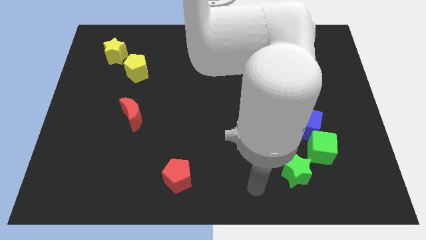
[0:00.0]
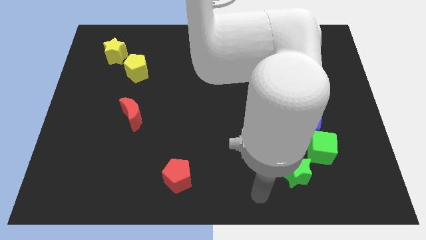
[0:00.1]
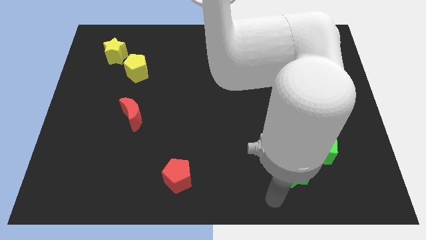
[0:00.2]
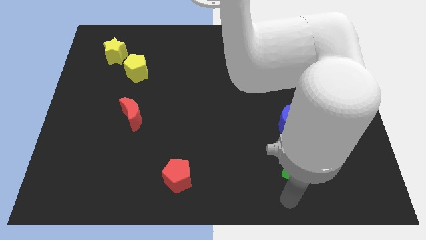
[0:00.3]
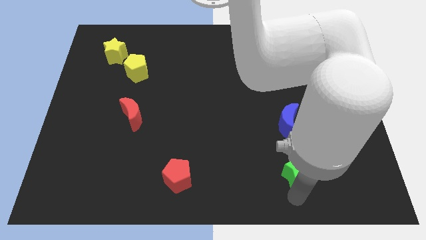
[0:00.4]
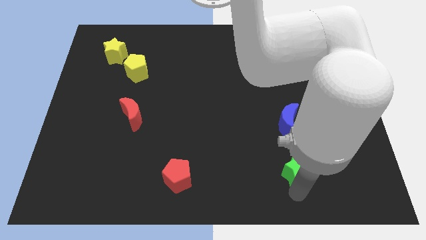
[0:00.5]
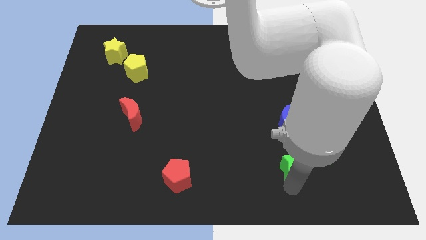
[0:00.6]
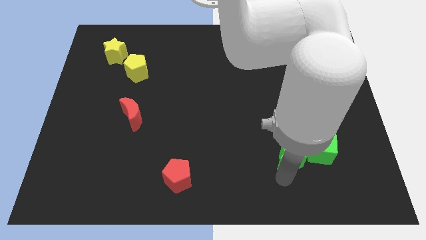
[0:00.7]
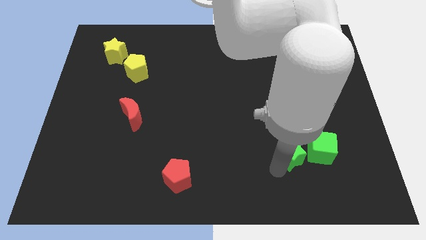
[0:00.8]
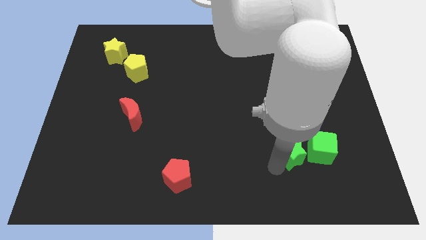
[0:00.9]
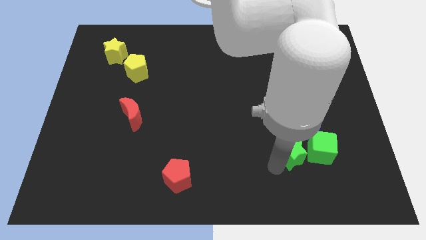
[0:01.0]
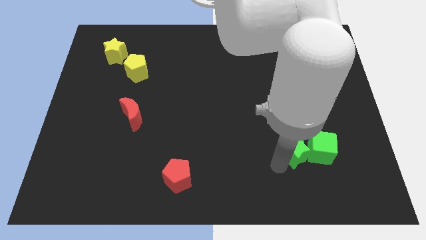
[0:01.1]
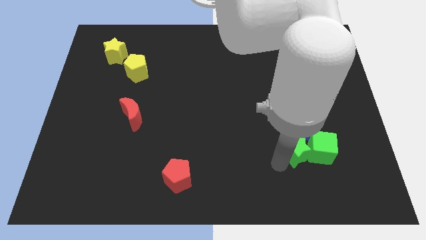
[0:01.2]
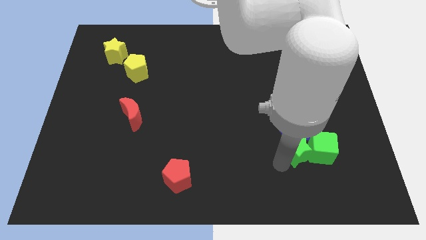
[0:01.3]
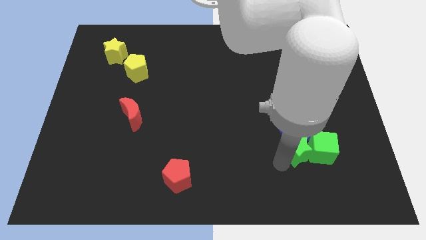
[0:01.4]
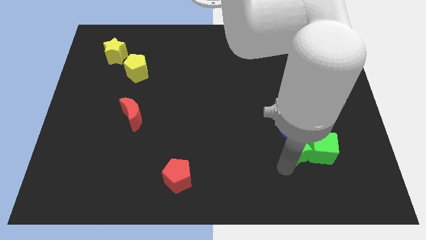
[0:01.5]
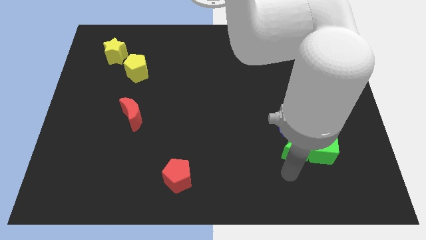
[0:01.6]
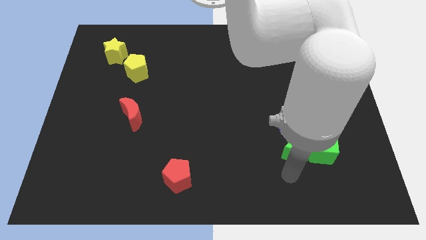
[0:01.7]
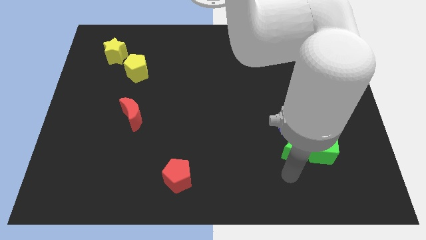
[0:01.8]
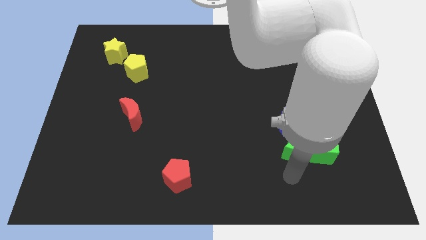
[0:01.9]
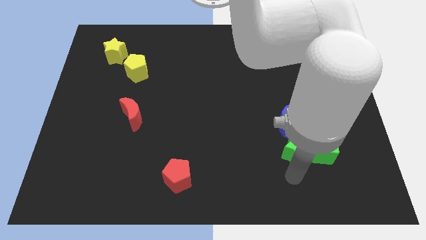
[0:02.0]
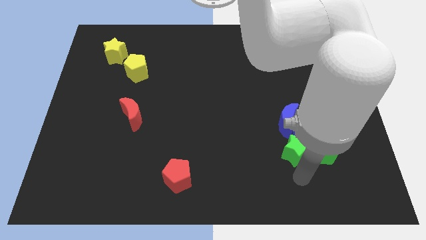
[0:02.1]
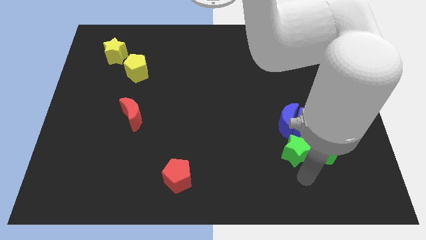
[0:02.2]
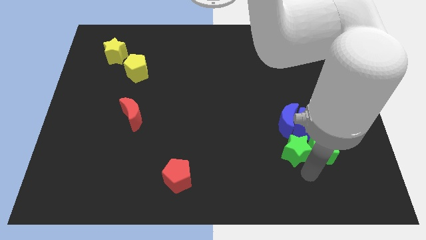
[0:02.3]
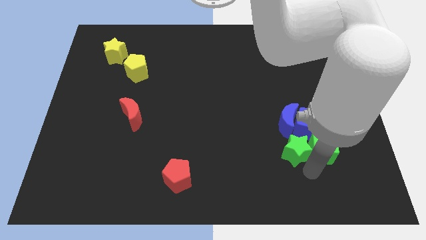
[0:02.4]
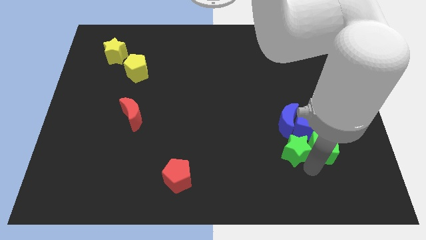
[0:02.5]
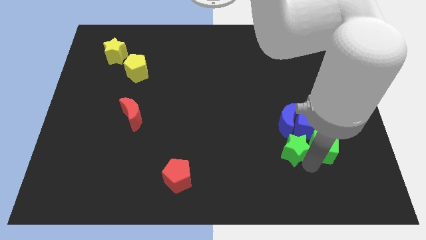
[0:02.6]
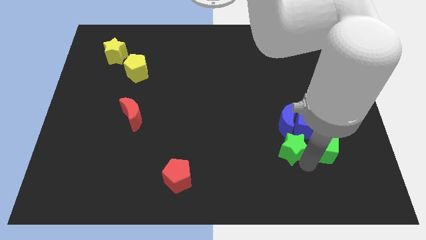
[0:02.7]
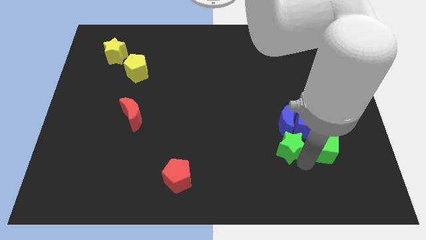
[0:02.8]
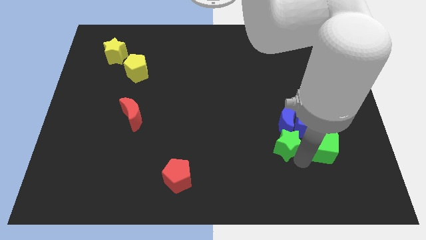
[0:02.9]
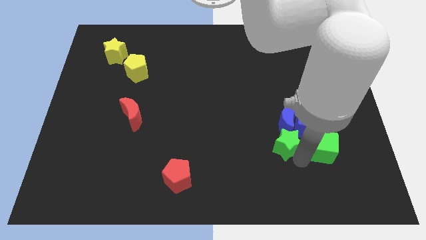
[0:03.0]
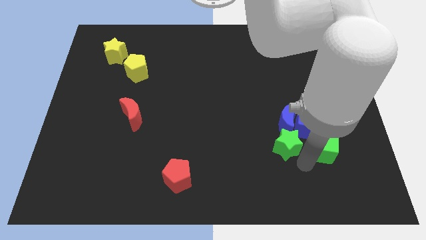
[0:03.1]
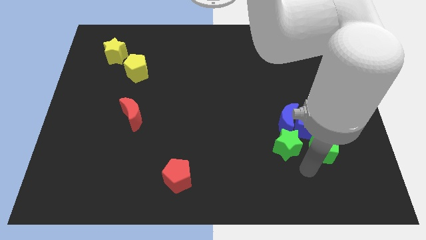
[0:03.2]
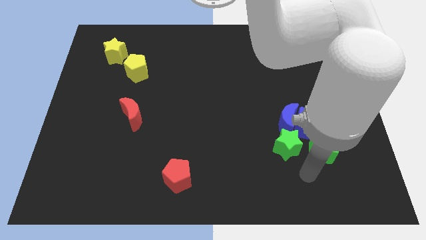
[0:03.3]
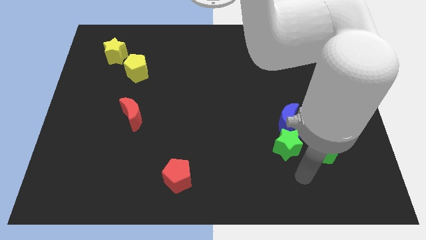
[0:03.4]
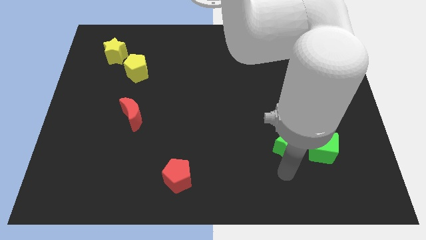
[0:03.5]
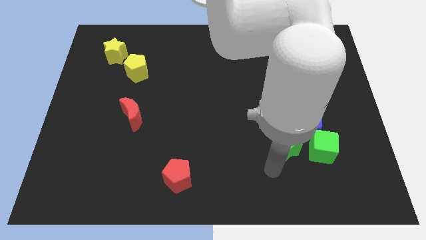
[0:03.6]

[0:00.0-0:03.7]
place the green star parallel left to the green cube

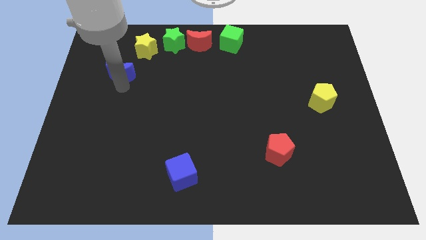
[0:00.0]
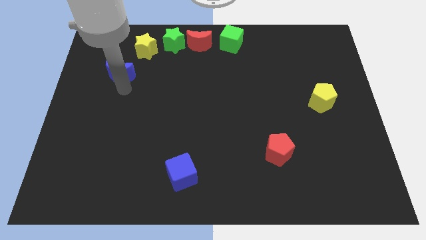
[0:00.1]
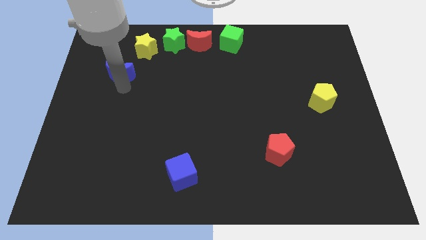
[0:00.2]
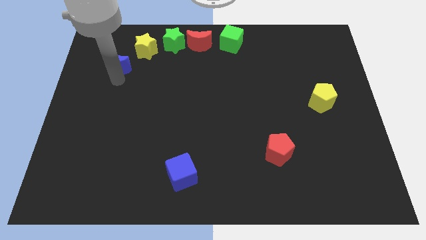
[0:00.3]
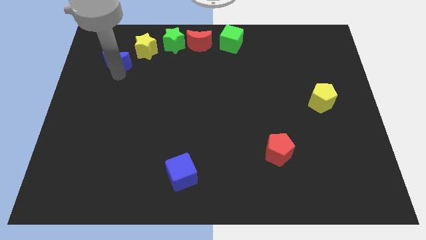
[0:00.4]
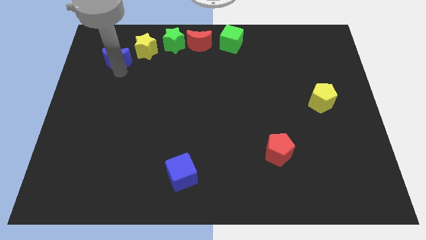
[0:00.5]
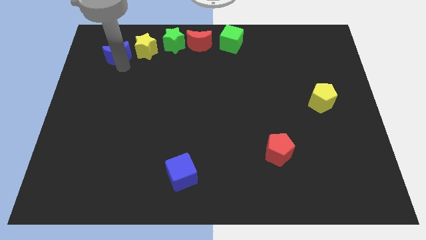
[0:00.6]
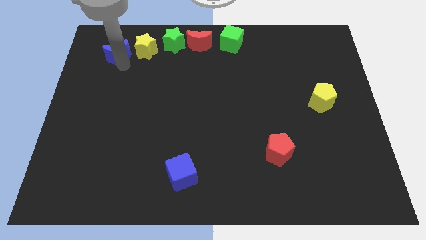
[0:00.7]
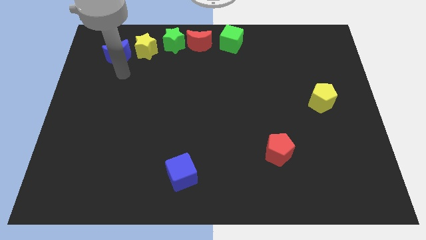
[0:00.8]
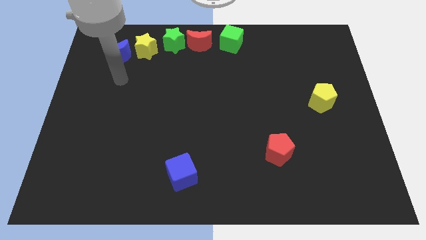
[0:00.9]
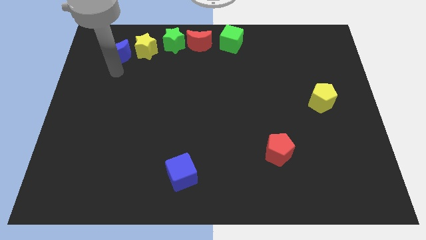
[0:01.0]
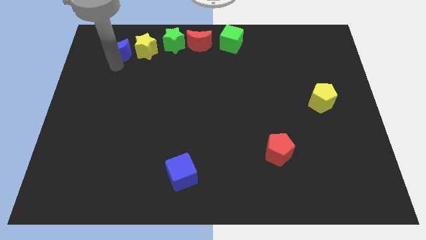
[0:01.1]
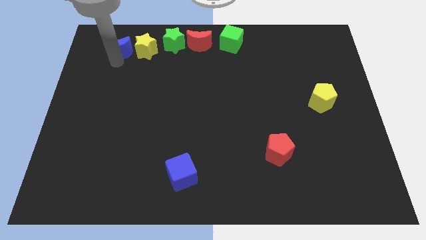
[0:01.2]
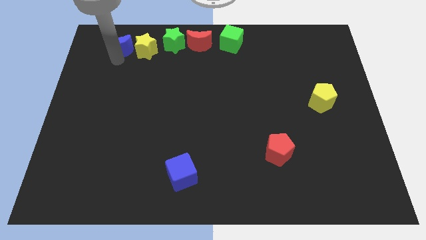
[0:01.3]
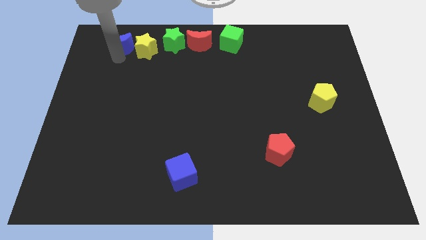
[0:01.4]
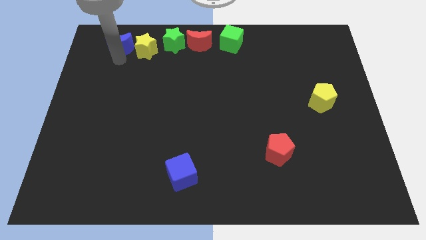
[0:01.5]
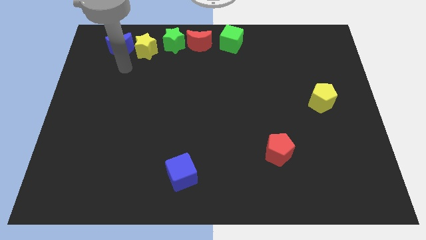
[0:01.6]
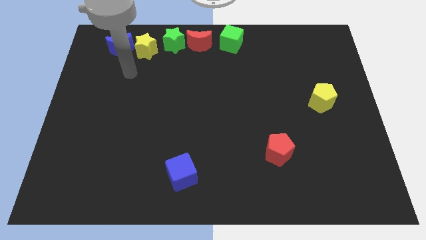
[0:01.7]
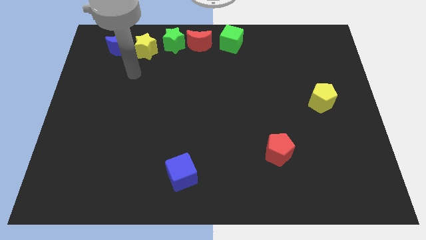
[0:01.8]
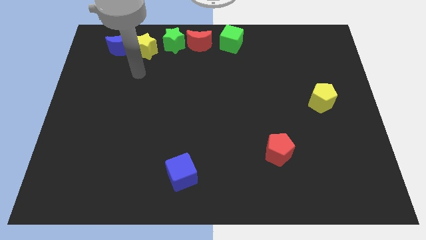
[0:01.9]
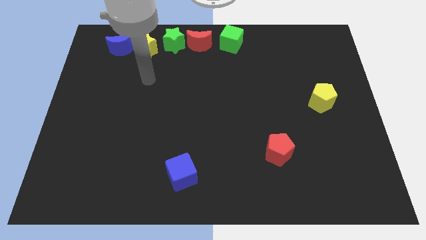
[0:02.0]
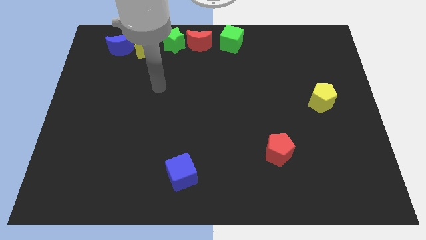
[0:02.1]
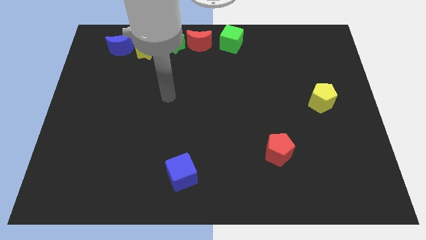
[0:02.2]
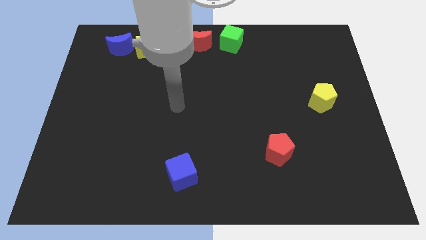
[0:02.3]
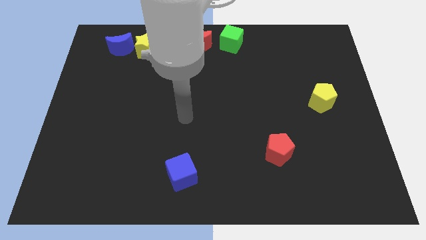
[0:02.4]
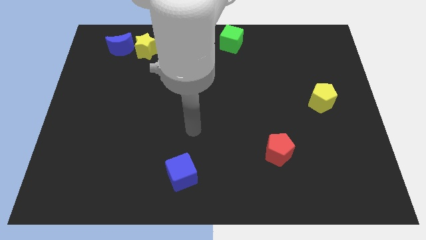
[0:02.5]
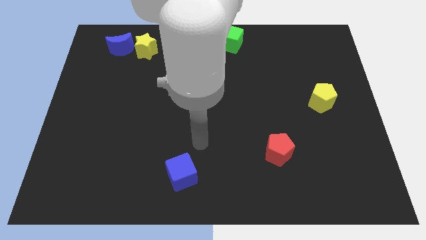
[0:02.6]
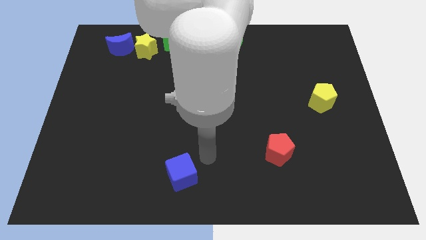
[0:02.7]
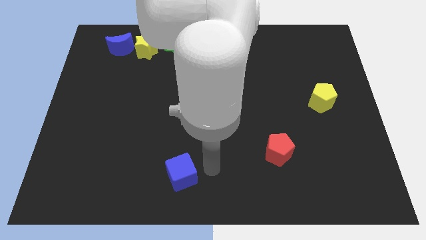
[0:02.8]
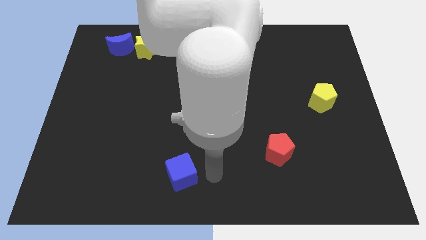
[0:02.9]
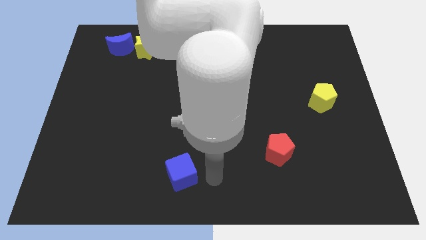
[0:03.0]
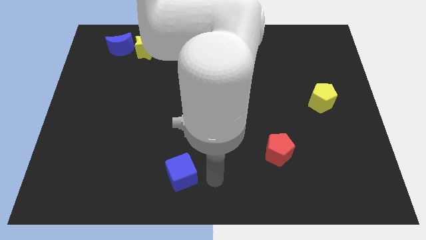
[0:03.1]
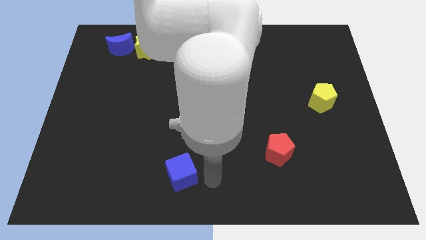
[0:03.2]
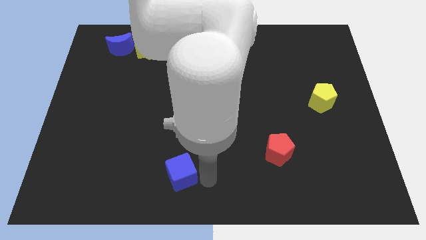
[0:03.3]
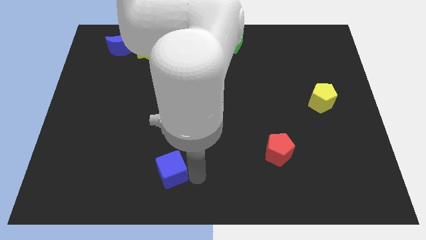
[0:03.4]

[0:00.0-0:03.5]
move the arm to the right of the blue cube

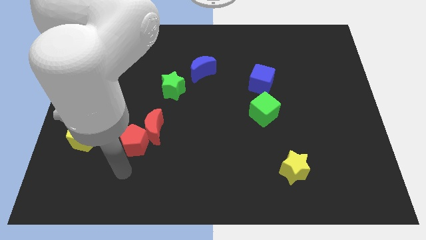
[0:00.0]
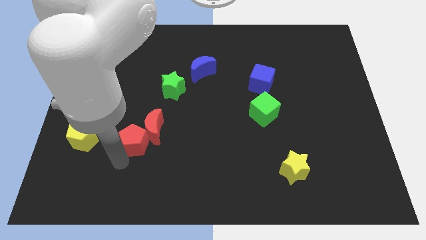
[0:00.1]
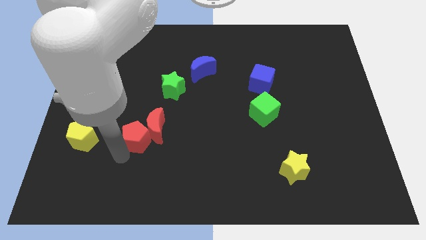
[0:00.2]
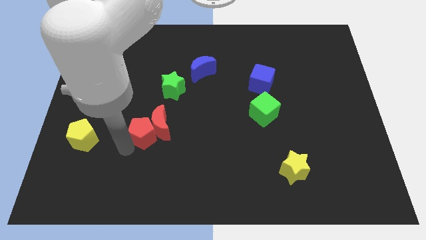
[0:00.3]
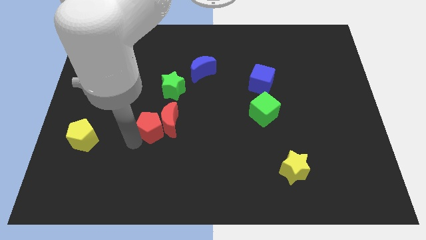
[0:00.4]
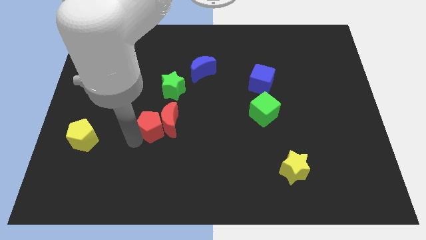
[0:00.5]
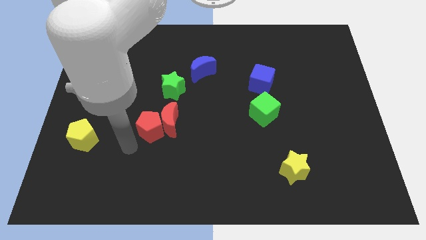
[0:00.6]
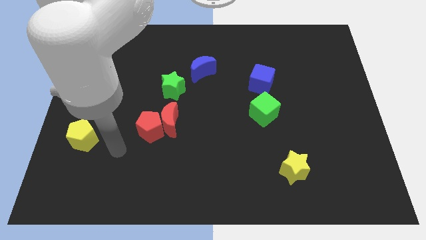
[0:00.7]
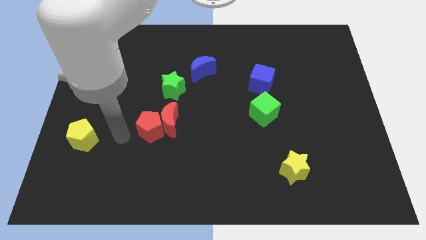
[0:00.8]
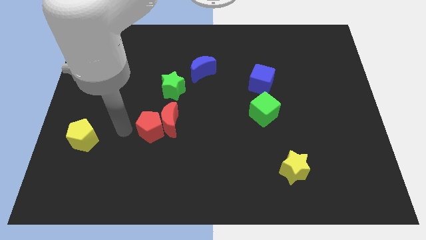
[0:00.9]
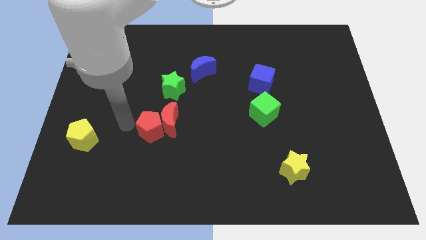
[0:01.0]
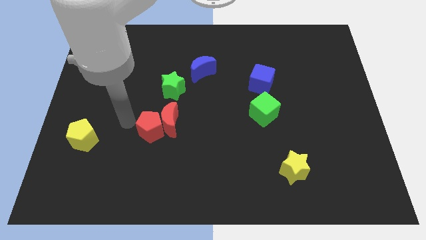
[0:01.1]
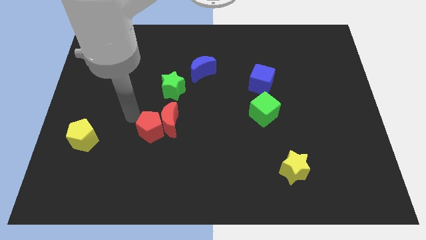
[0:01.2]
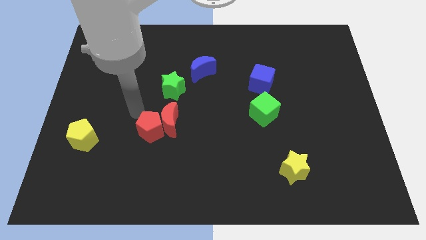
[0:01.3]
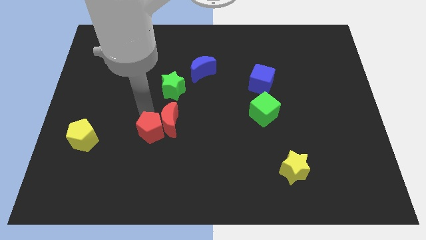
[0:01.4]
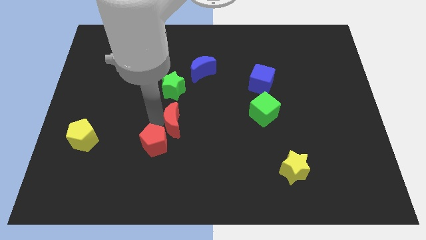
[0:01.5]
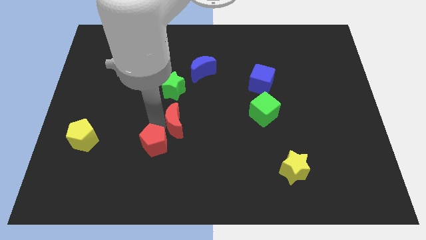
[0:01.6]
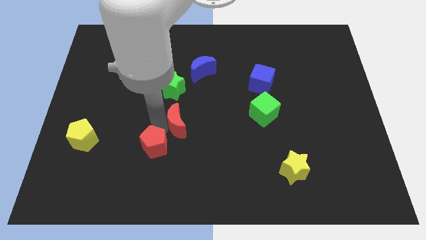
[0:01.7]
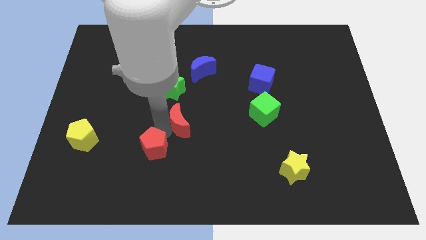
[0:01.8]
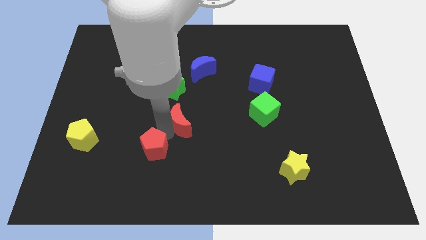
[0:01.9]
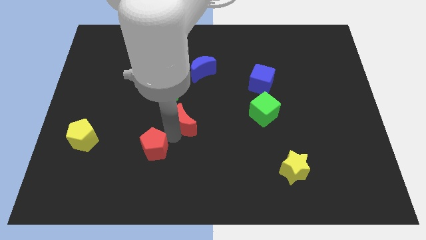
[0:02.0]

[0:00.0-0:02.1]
separate red crescent and red pentagon

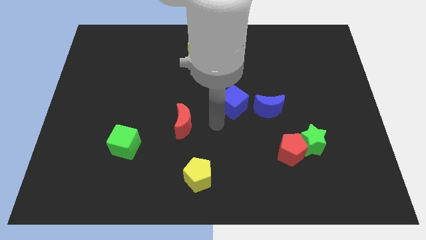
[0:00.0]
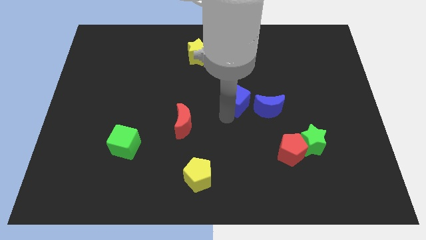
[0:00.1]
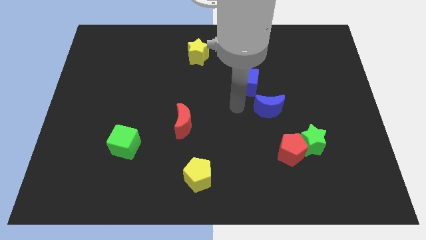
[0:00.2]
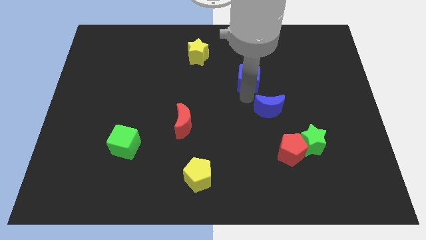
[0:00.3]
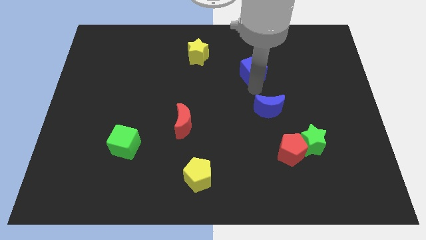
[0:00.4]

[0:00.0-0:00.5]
place the blue cube in between the blue moon and yellow star
